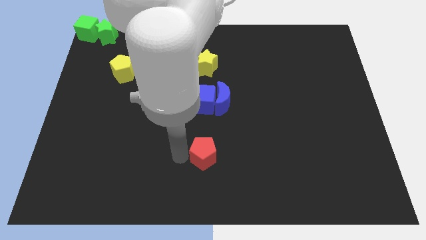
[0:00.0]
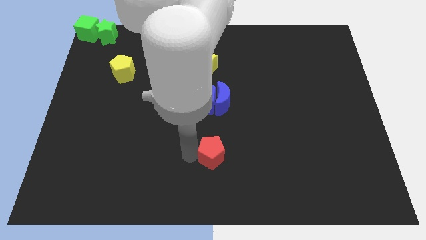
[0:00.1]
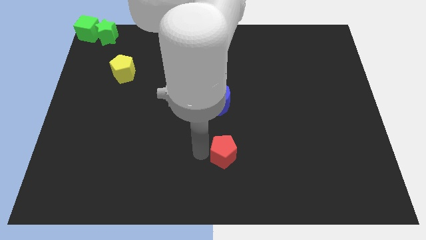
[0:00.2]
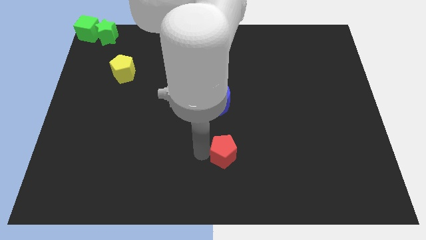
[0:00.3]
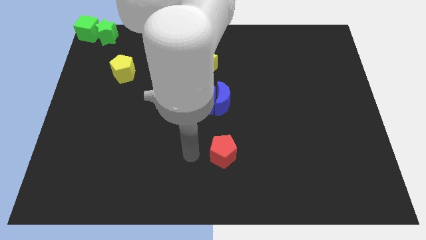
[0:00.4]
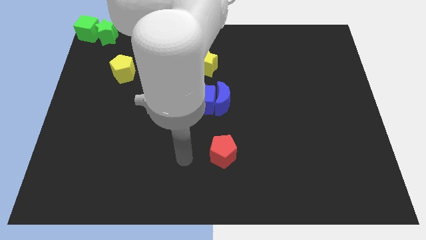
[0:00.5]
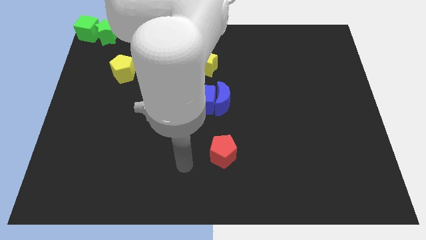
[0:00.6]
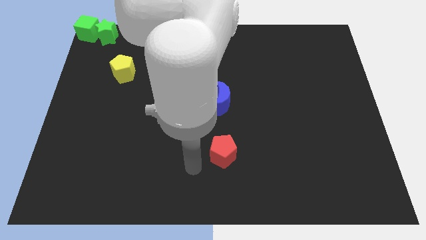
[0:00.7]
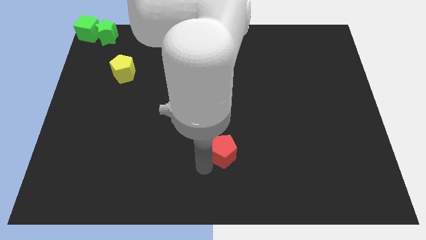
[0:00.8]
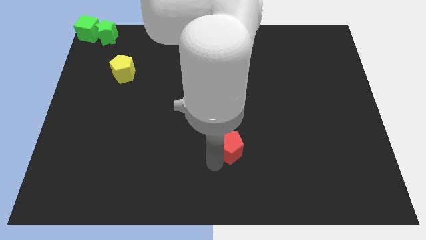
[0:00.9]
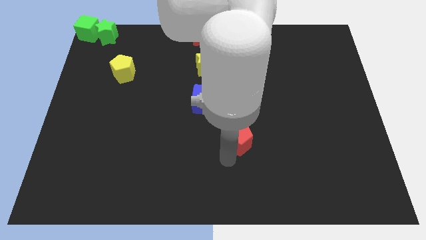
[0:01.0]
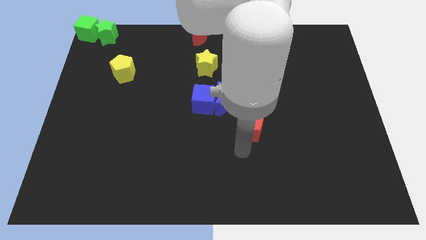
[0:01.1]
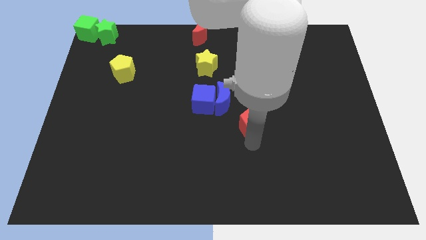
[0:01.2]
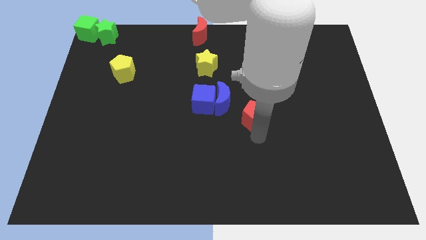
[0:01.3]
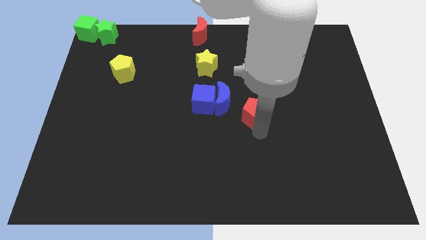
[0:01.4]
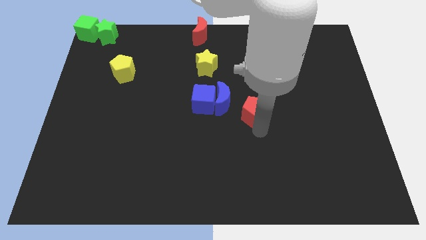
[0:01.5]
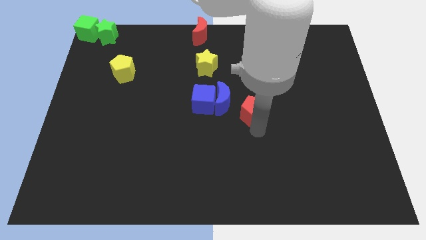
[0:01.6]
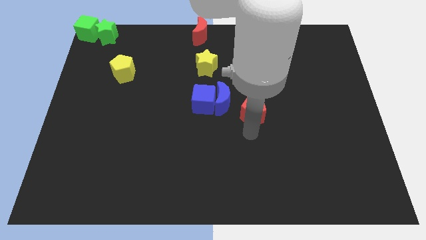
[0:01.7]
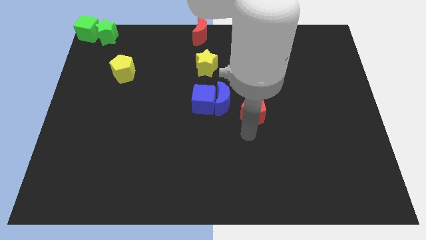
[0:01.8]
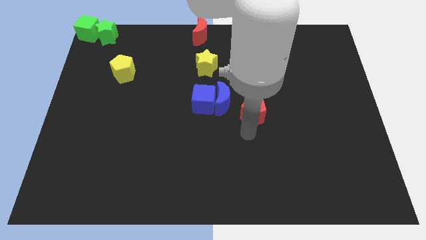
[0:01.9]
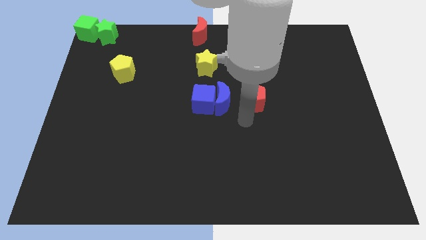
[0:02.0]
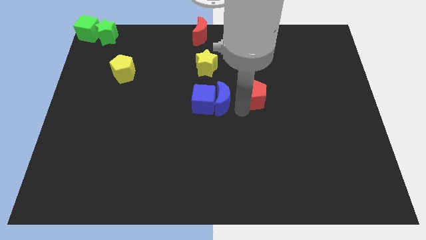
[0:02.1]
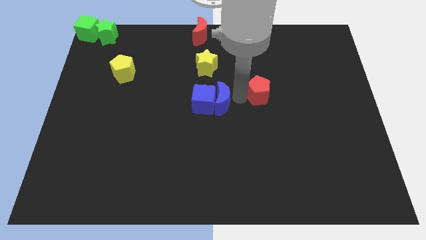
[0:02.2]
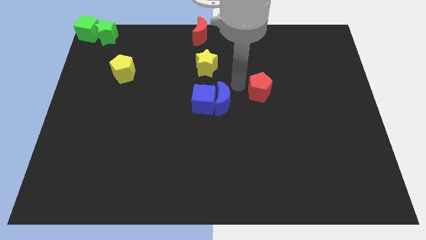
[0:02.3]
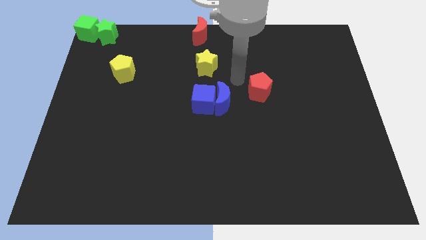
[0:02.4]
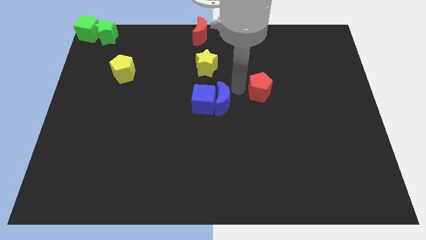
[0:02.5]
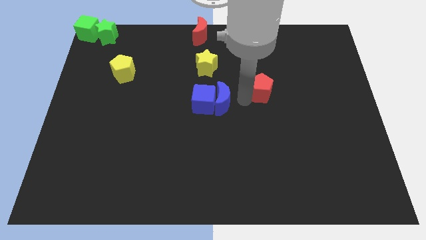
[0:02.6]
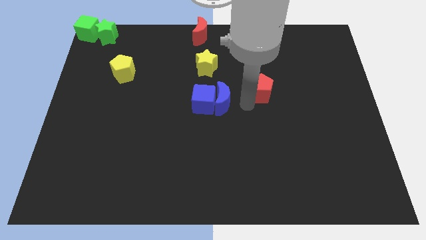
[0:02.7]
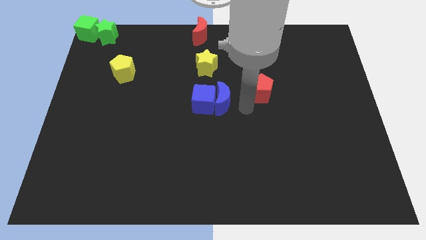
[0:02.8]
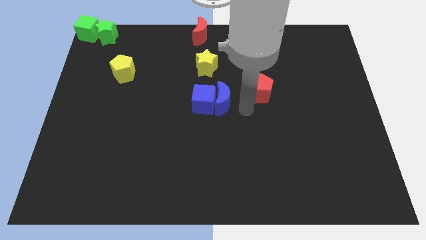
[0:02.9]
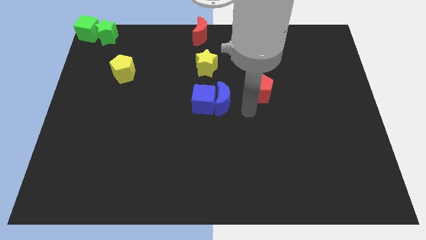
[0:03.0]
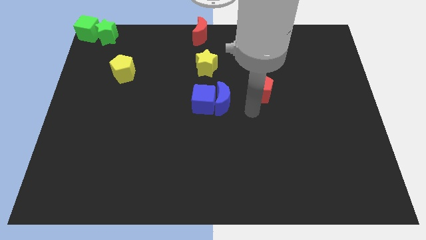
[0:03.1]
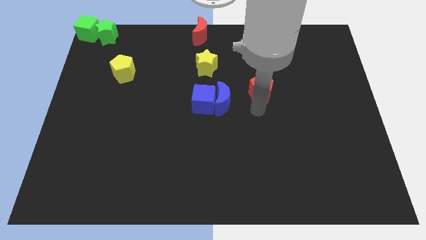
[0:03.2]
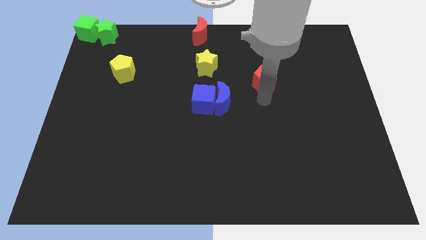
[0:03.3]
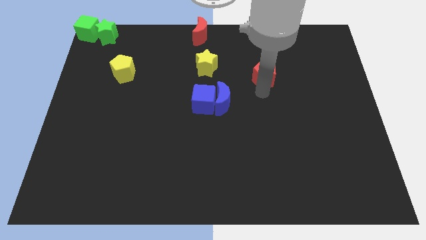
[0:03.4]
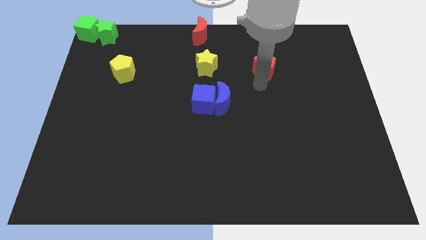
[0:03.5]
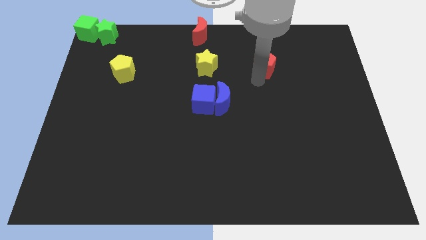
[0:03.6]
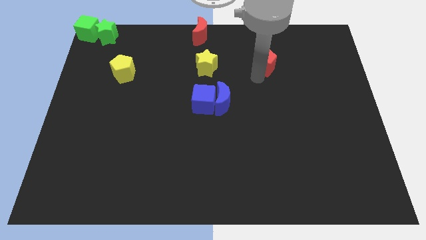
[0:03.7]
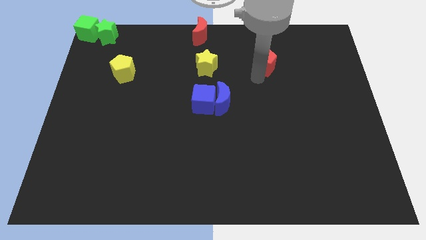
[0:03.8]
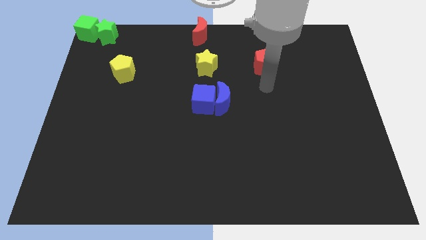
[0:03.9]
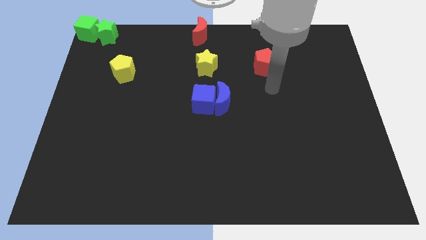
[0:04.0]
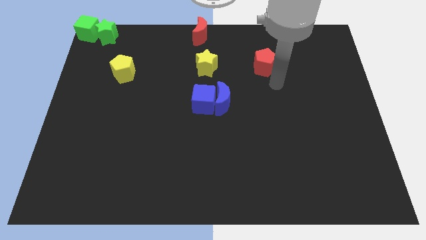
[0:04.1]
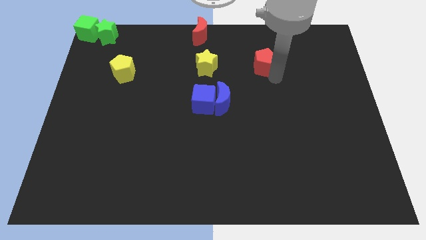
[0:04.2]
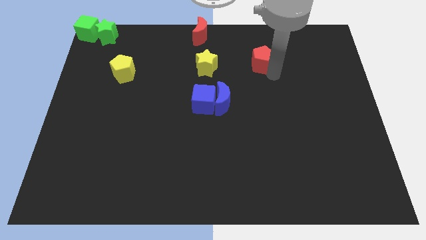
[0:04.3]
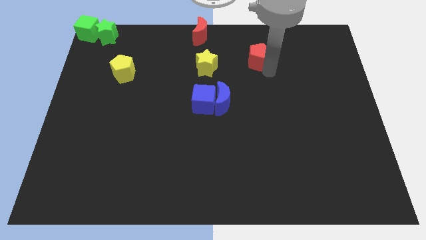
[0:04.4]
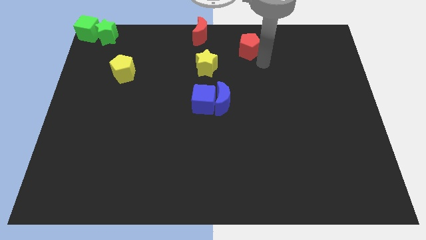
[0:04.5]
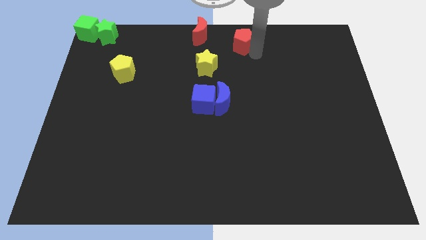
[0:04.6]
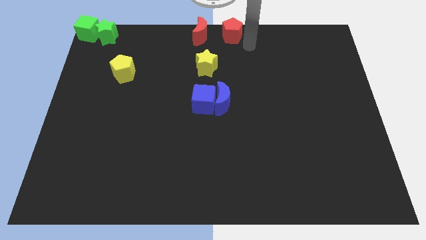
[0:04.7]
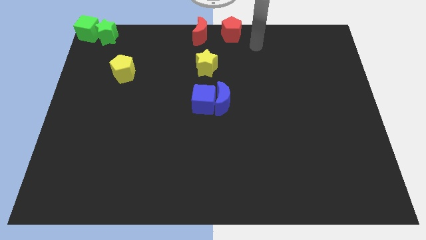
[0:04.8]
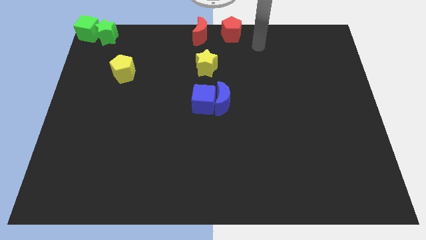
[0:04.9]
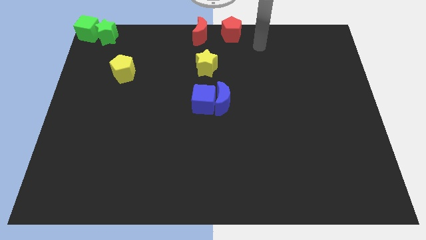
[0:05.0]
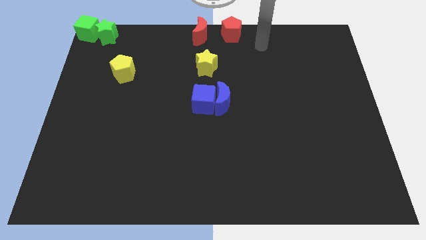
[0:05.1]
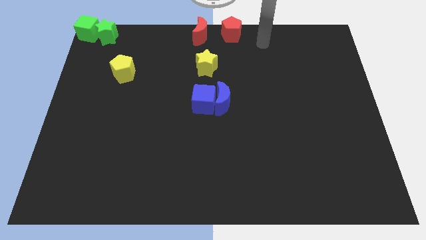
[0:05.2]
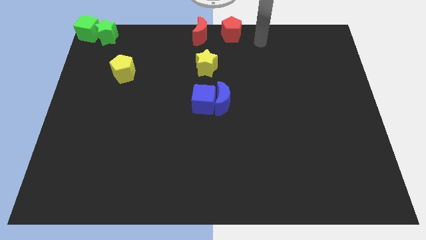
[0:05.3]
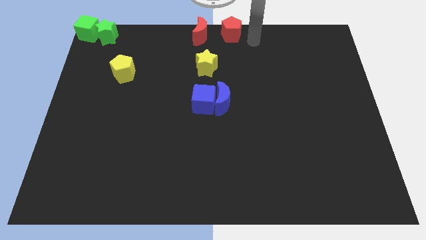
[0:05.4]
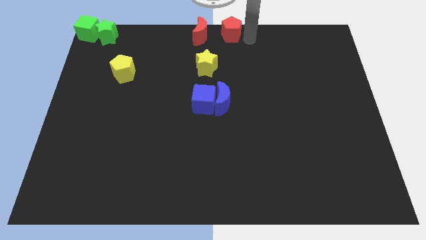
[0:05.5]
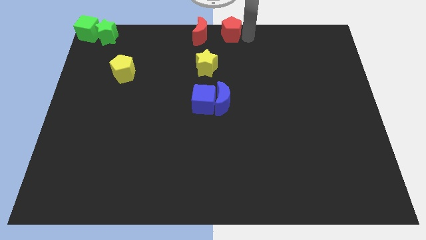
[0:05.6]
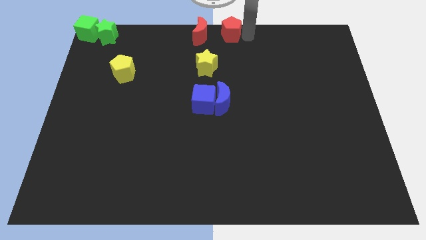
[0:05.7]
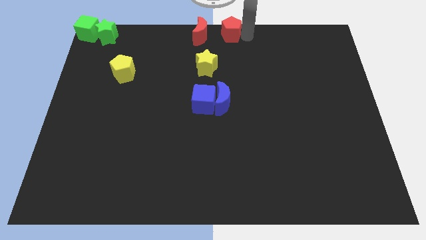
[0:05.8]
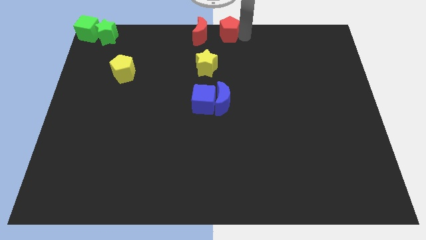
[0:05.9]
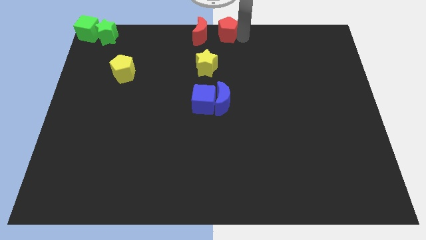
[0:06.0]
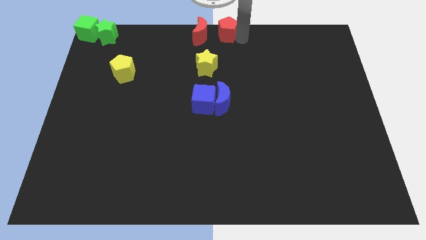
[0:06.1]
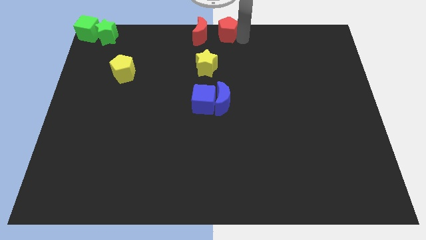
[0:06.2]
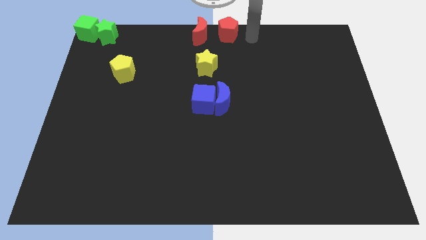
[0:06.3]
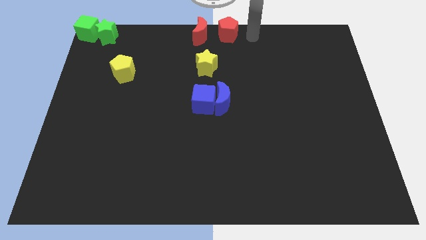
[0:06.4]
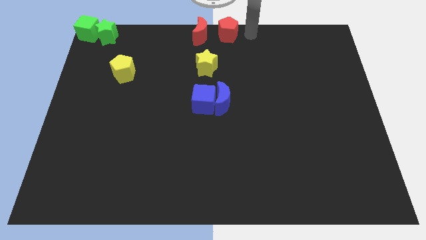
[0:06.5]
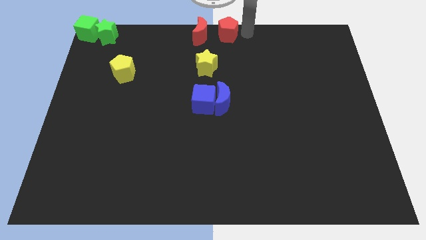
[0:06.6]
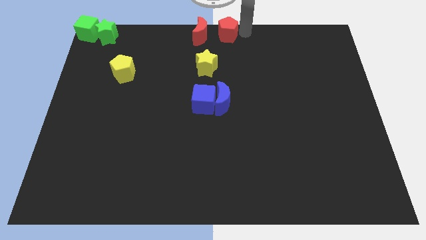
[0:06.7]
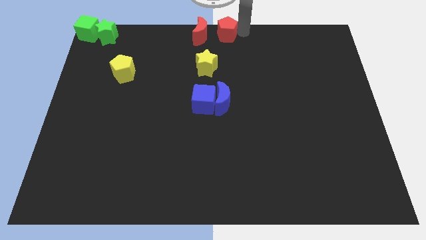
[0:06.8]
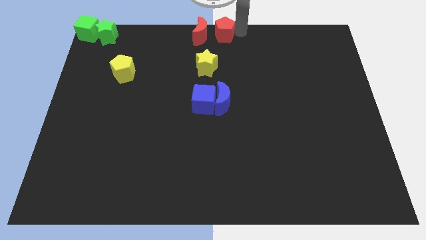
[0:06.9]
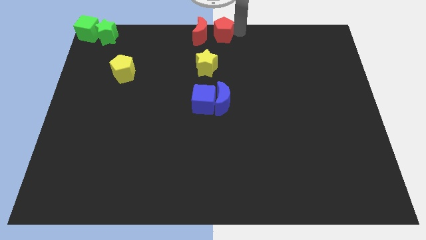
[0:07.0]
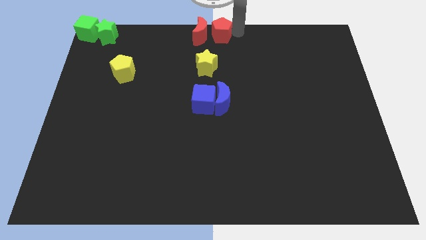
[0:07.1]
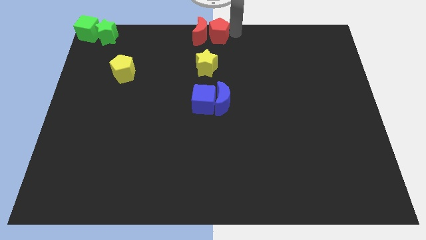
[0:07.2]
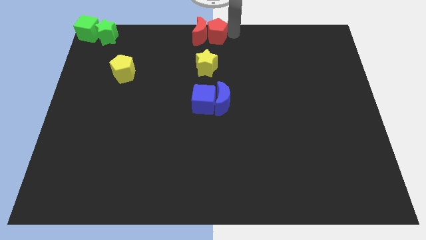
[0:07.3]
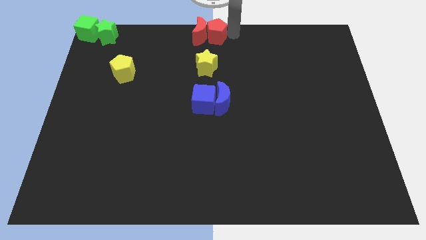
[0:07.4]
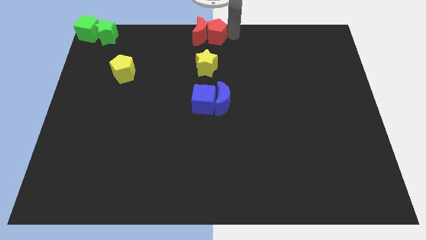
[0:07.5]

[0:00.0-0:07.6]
move the red pentagon to the right side of the red crescent on the board

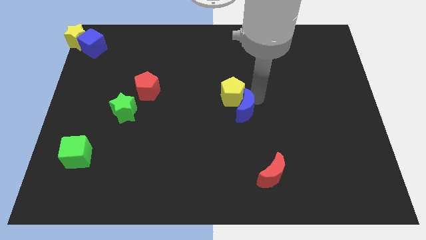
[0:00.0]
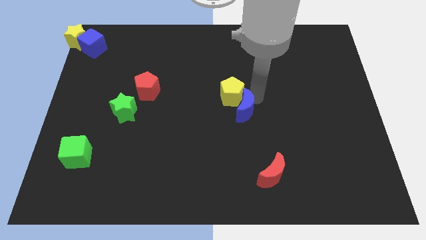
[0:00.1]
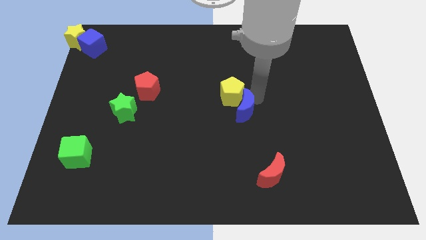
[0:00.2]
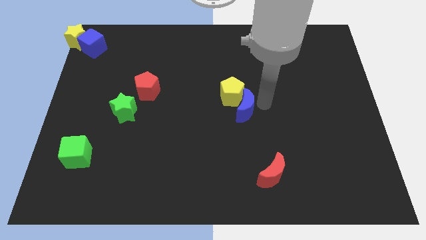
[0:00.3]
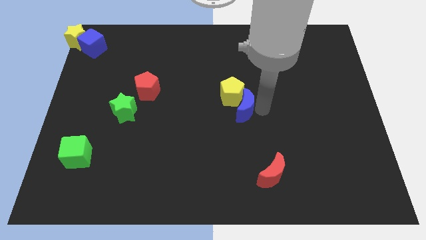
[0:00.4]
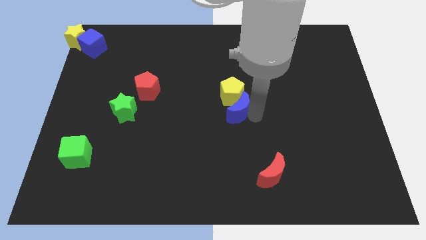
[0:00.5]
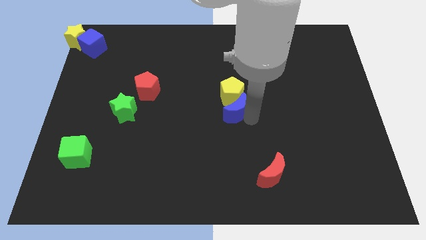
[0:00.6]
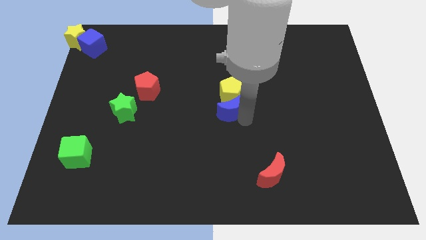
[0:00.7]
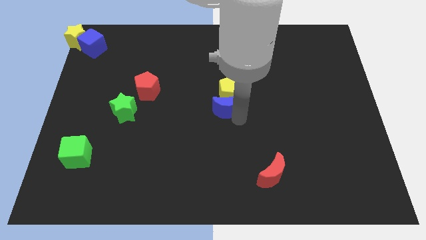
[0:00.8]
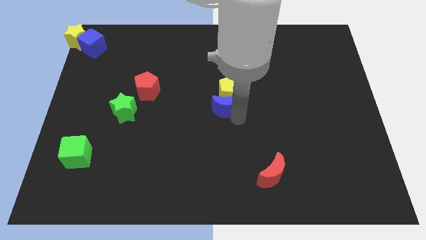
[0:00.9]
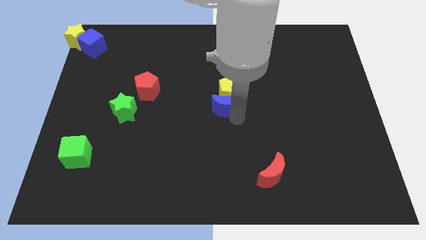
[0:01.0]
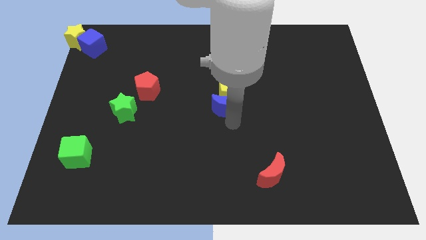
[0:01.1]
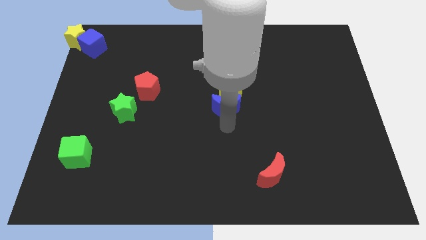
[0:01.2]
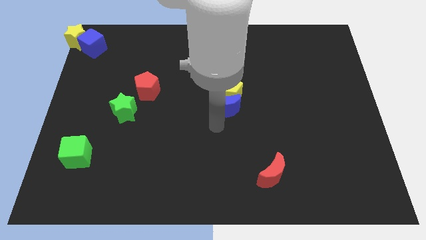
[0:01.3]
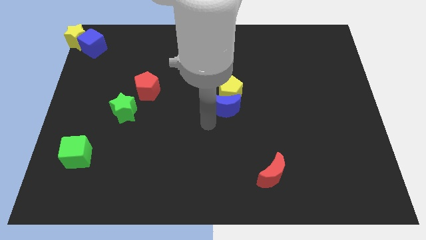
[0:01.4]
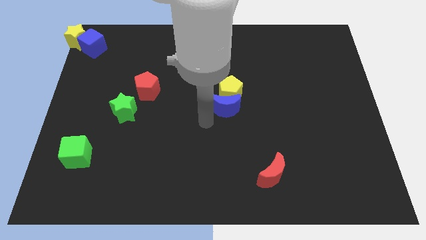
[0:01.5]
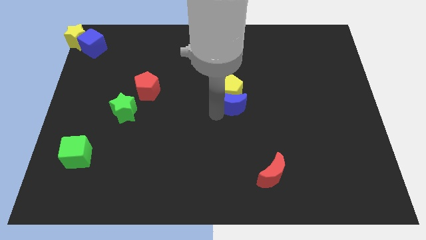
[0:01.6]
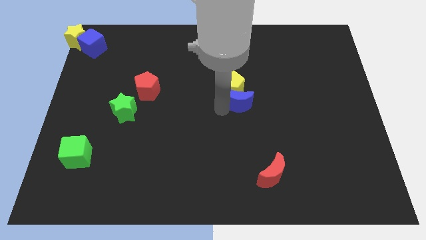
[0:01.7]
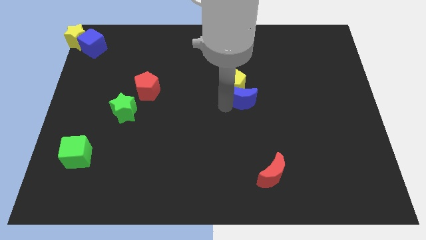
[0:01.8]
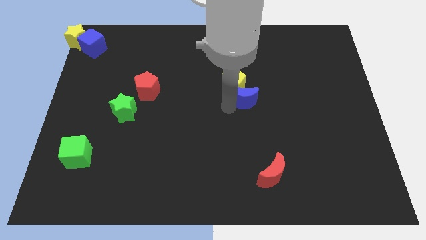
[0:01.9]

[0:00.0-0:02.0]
place blue crescent down to the yellow pentagon
